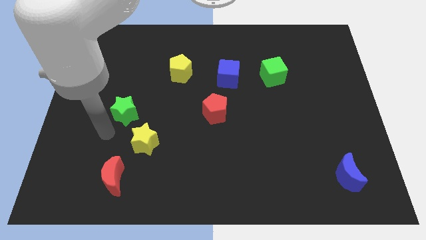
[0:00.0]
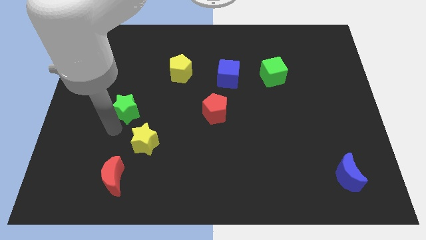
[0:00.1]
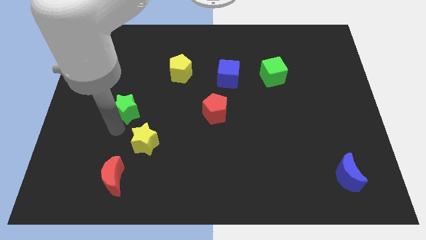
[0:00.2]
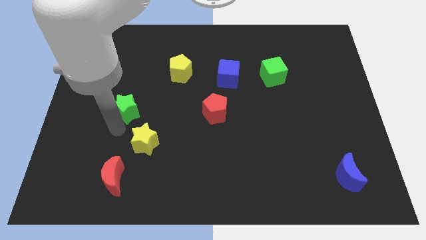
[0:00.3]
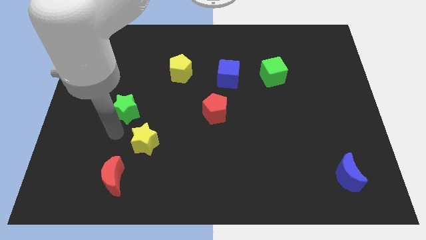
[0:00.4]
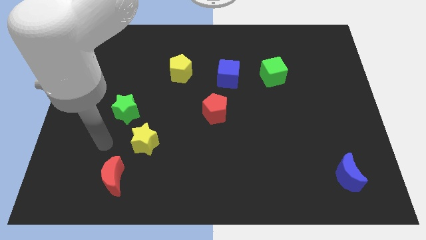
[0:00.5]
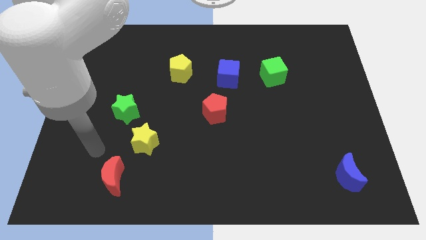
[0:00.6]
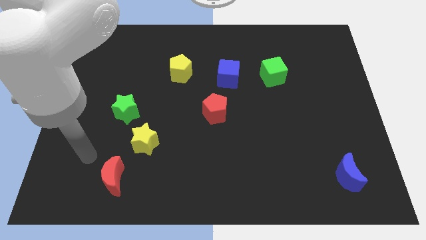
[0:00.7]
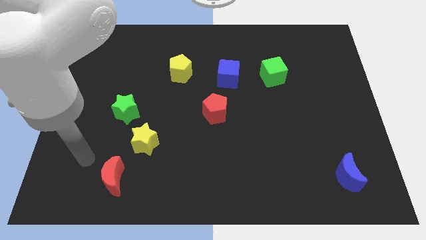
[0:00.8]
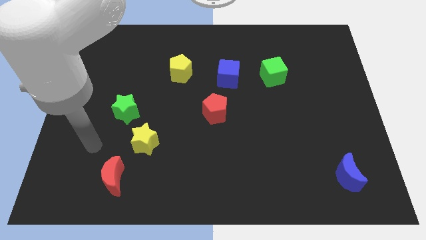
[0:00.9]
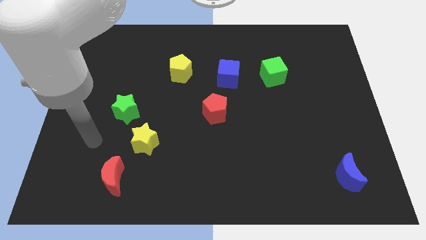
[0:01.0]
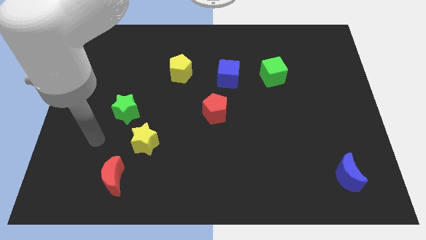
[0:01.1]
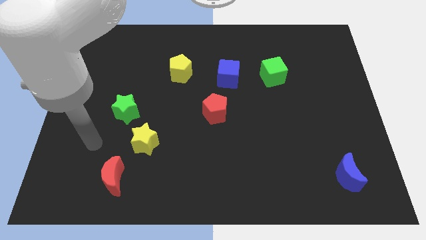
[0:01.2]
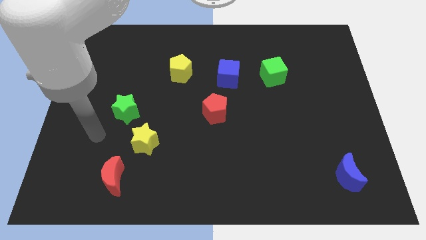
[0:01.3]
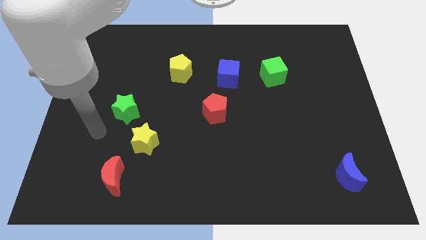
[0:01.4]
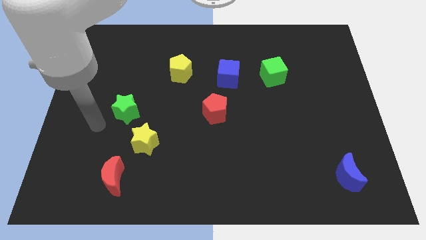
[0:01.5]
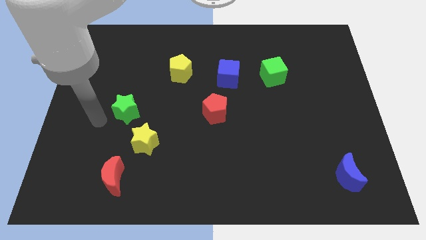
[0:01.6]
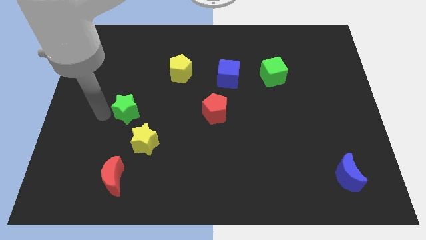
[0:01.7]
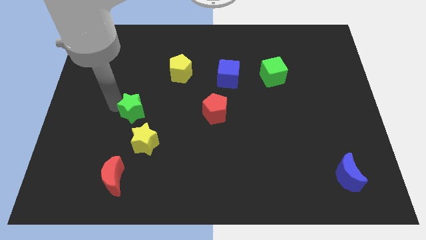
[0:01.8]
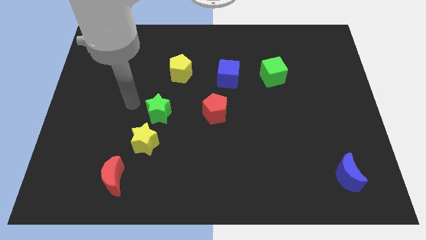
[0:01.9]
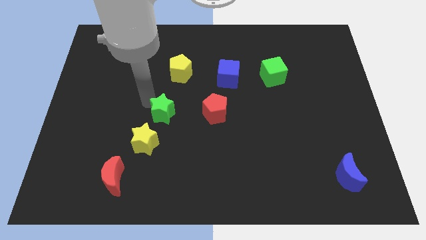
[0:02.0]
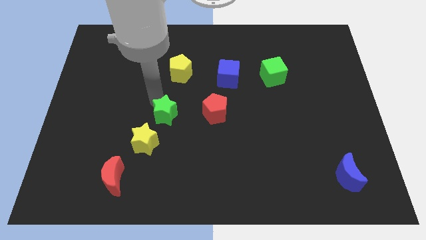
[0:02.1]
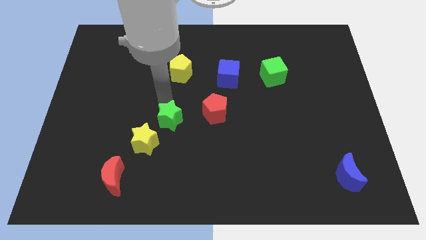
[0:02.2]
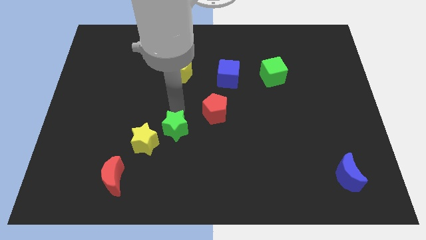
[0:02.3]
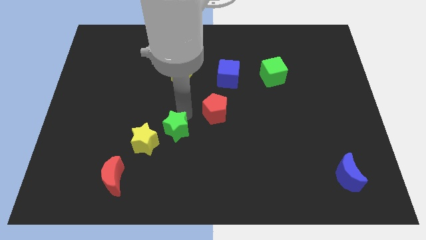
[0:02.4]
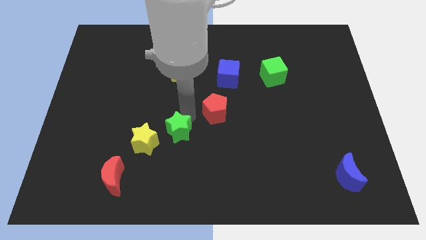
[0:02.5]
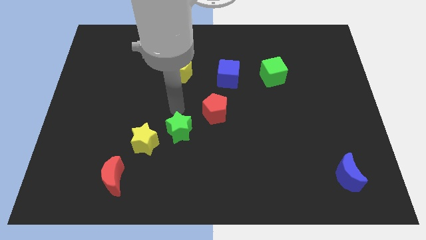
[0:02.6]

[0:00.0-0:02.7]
move the green star between the yellow star and red pentagon

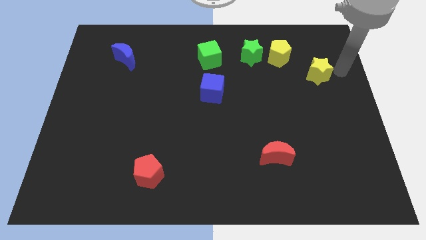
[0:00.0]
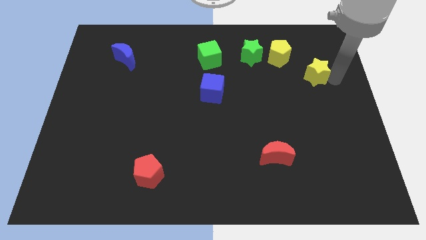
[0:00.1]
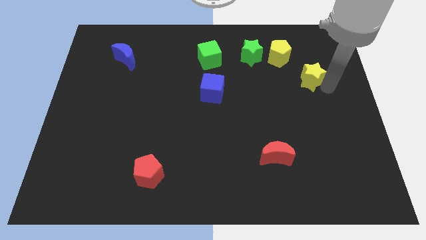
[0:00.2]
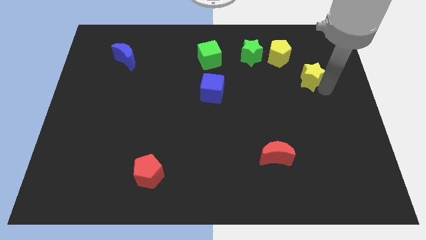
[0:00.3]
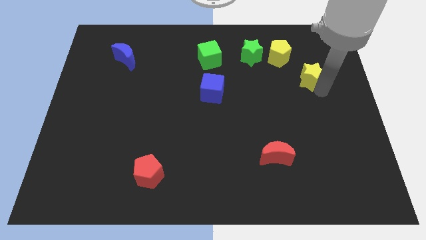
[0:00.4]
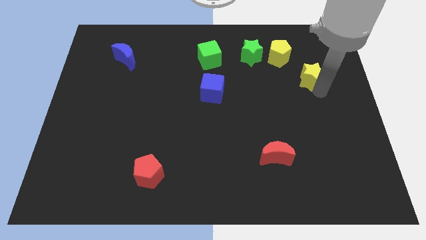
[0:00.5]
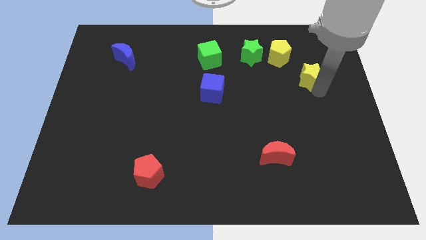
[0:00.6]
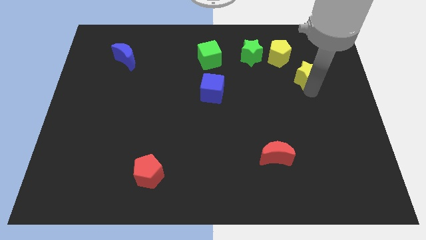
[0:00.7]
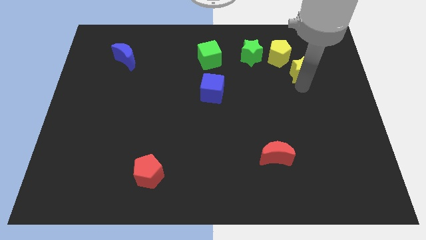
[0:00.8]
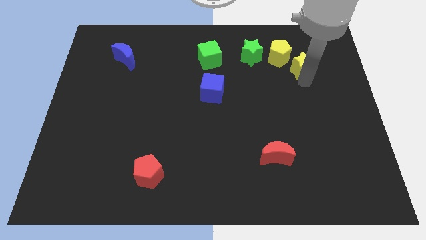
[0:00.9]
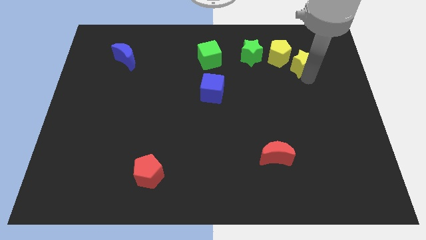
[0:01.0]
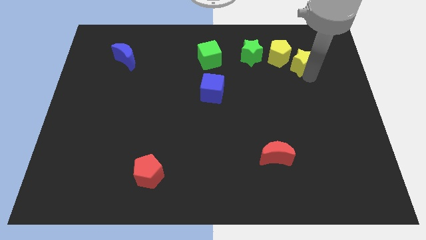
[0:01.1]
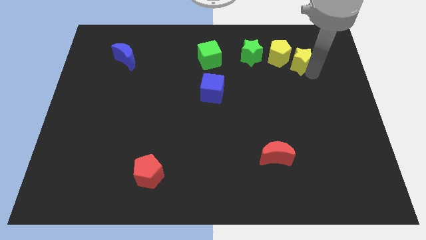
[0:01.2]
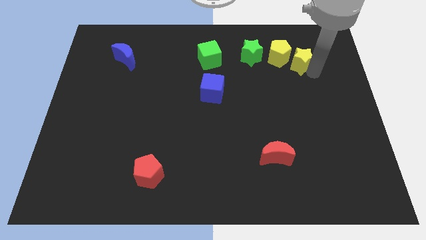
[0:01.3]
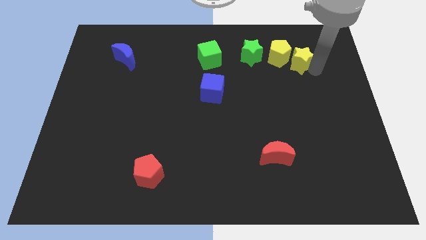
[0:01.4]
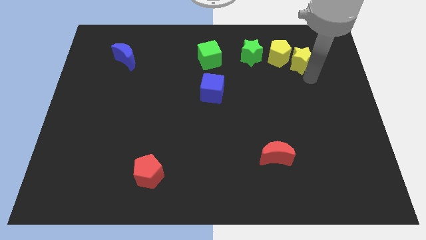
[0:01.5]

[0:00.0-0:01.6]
point your arm below yellow star

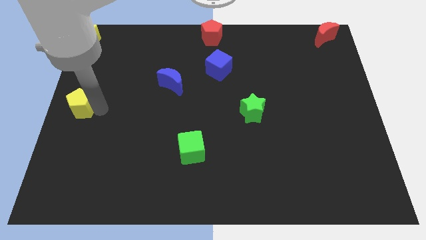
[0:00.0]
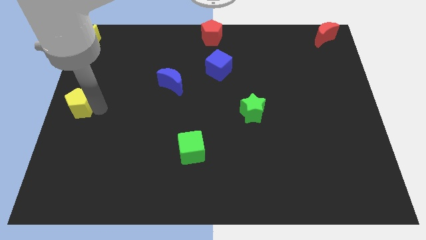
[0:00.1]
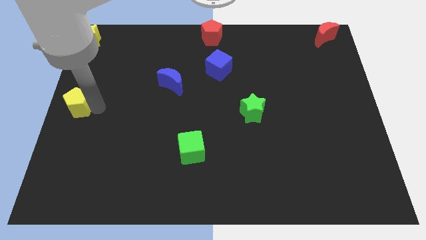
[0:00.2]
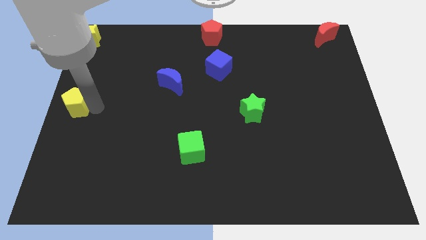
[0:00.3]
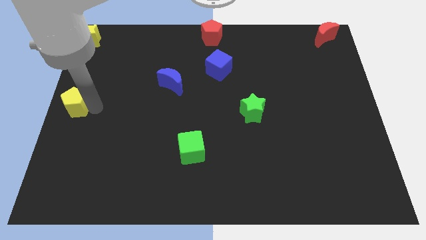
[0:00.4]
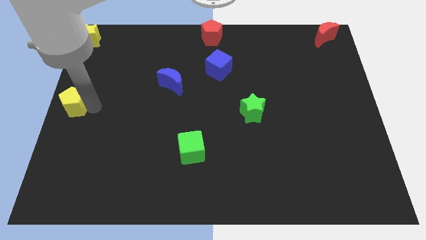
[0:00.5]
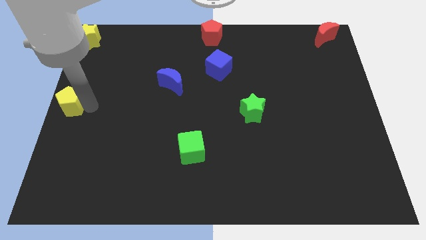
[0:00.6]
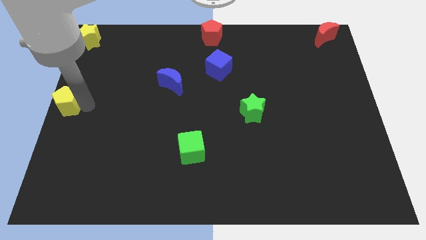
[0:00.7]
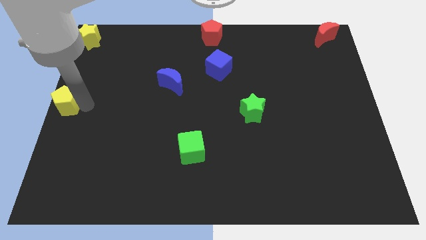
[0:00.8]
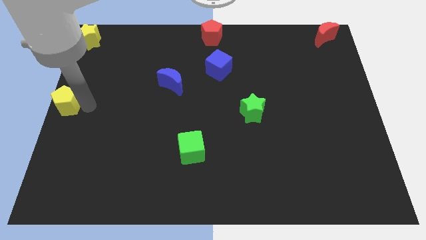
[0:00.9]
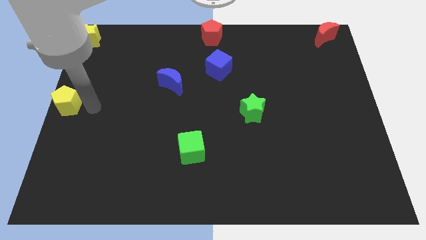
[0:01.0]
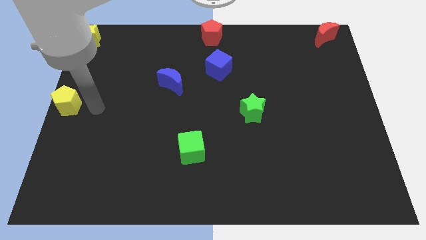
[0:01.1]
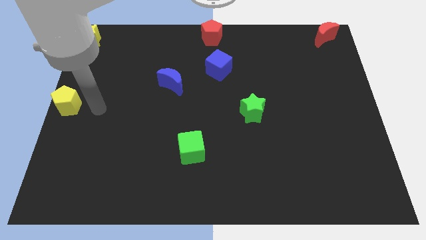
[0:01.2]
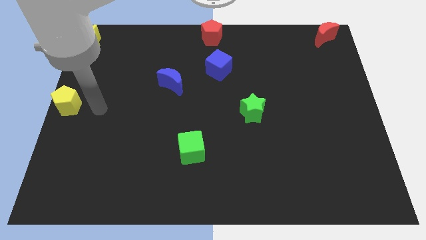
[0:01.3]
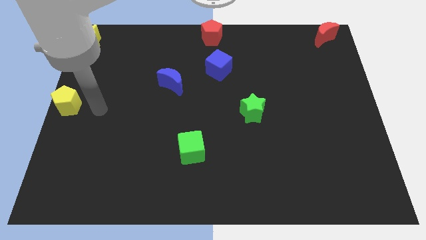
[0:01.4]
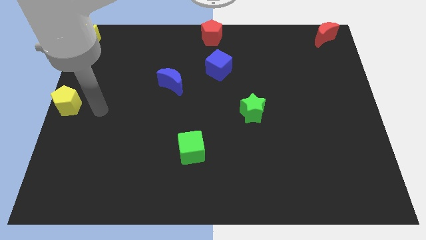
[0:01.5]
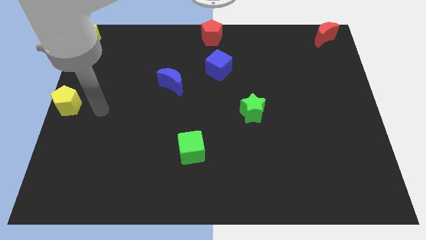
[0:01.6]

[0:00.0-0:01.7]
move the yellow pentagon to the left middle of the board

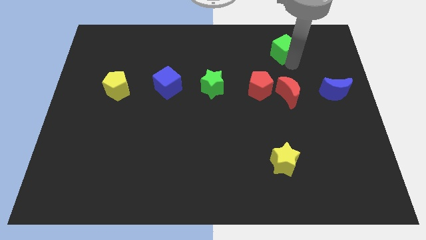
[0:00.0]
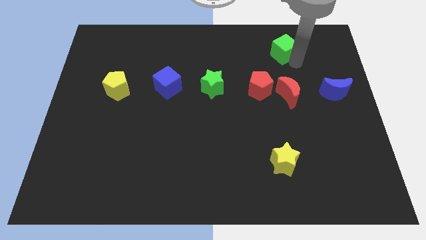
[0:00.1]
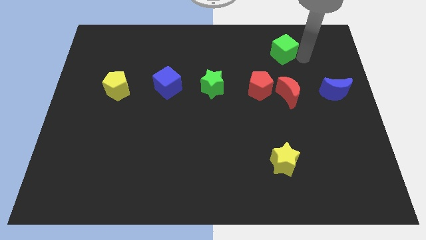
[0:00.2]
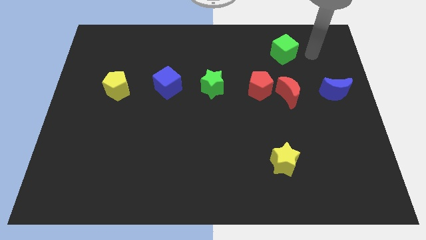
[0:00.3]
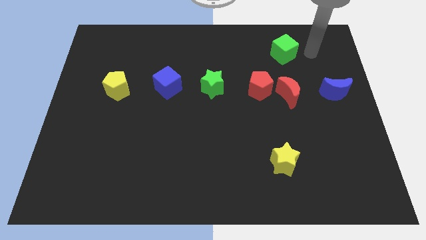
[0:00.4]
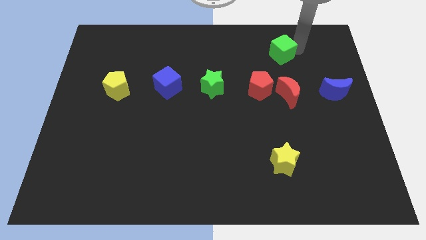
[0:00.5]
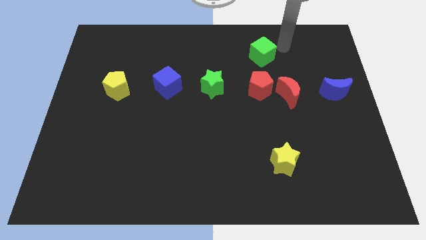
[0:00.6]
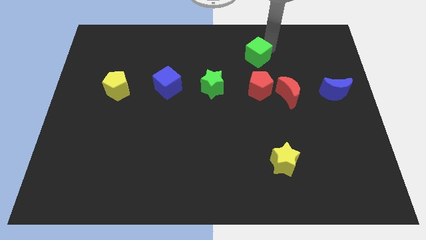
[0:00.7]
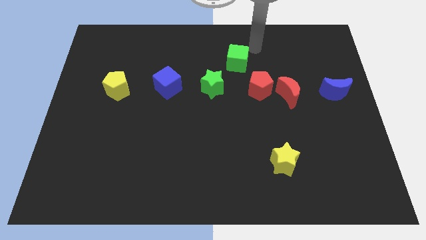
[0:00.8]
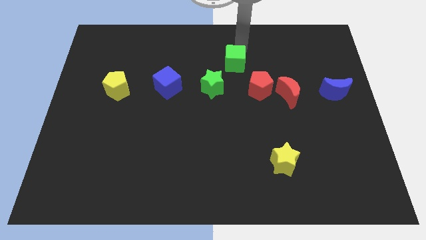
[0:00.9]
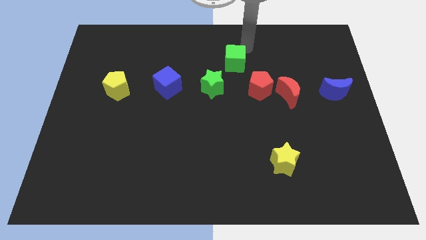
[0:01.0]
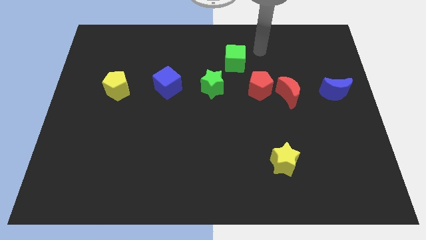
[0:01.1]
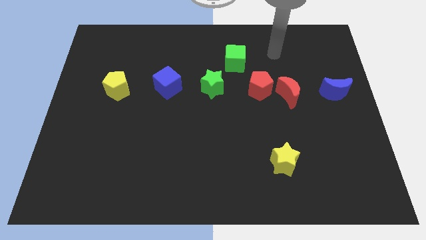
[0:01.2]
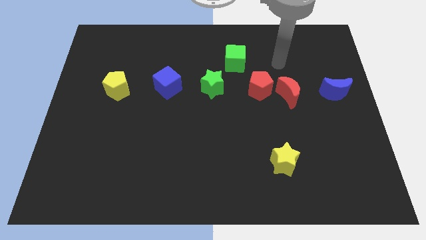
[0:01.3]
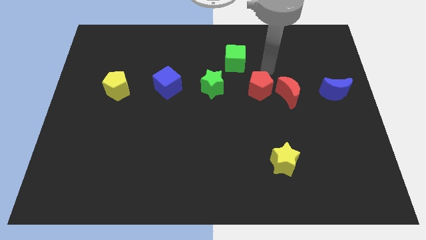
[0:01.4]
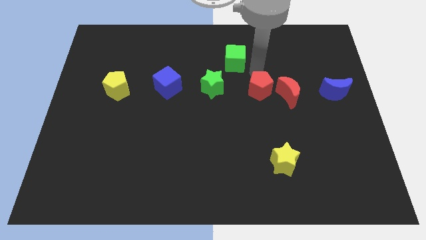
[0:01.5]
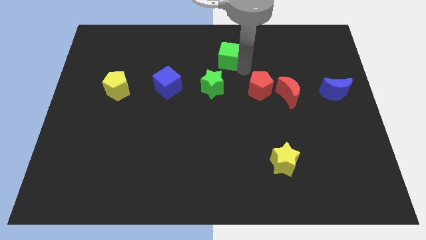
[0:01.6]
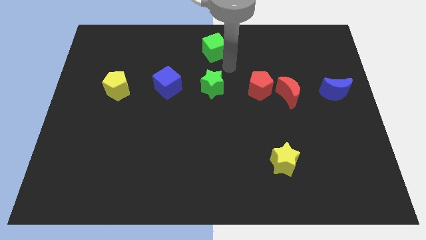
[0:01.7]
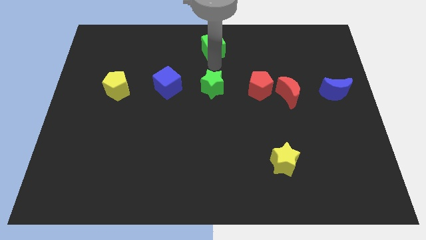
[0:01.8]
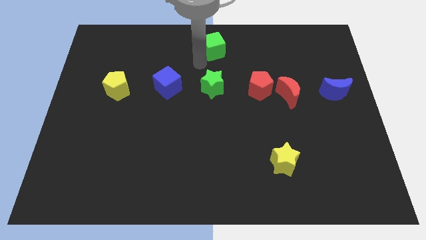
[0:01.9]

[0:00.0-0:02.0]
move the green cube above the green star

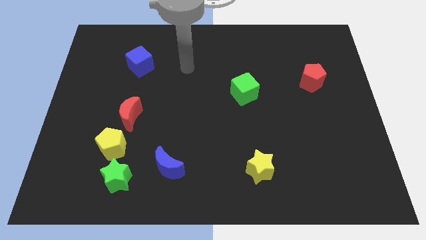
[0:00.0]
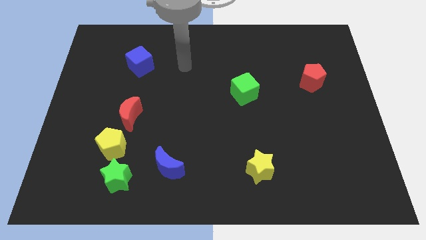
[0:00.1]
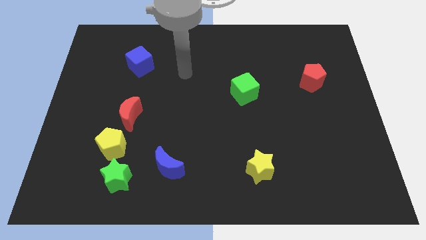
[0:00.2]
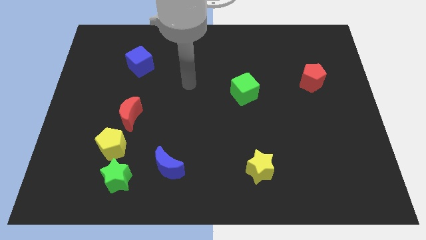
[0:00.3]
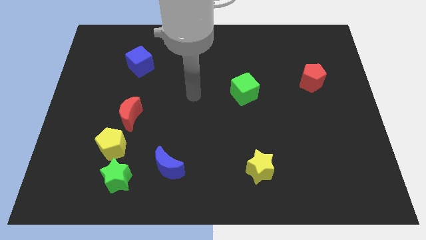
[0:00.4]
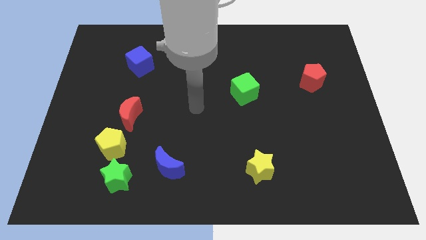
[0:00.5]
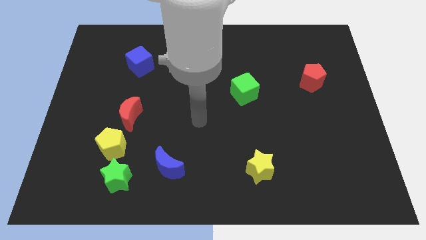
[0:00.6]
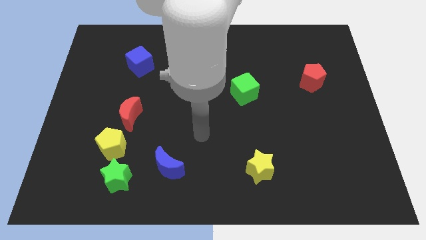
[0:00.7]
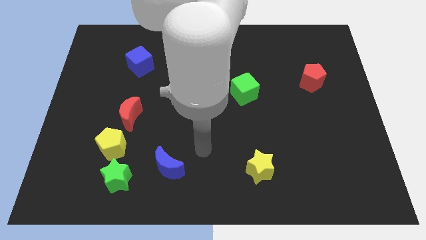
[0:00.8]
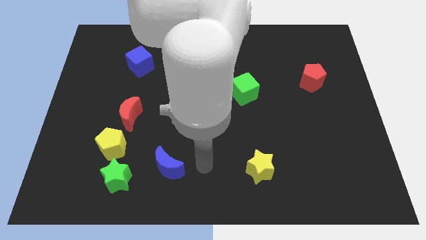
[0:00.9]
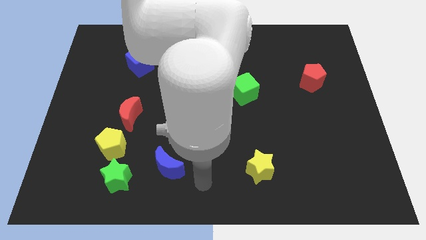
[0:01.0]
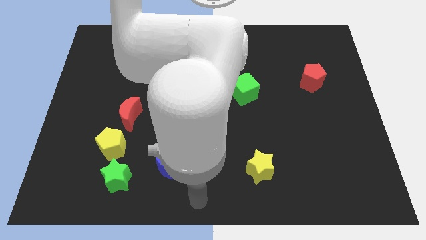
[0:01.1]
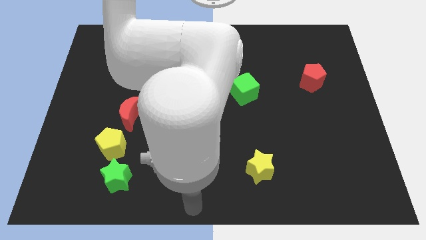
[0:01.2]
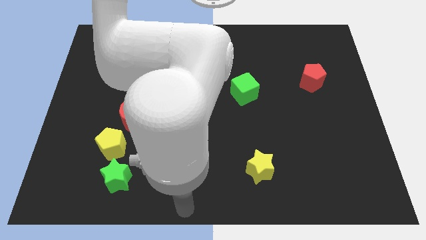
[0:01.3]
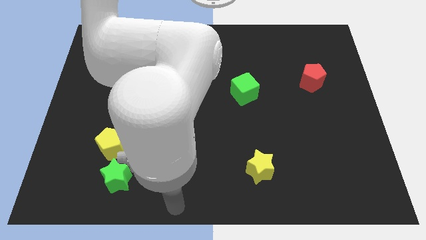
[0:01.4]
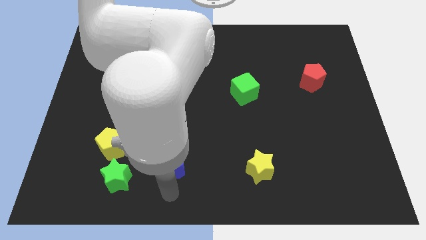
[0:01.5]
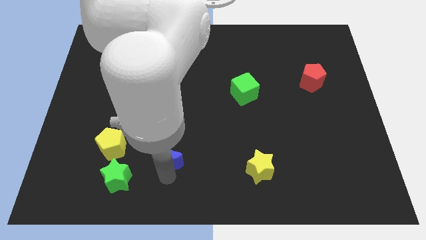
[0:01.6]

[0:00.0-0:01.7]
move your hand to the bottom of the blue crescent
